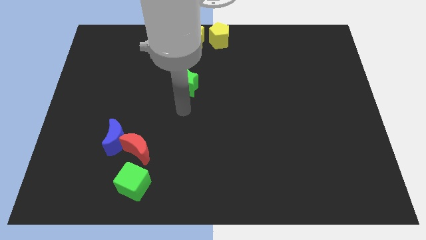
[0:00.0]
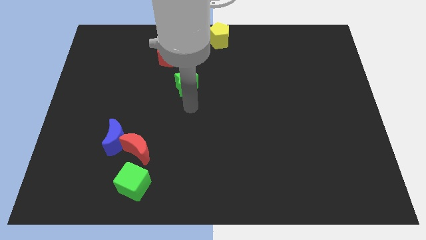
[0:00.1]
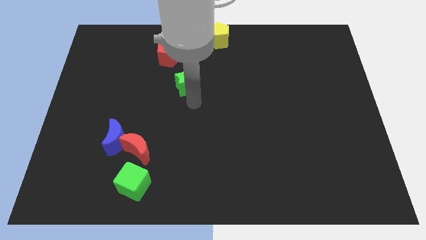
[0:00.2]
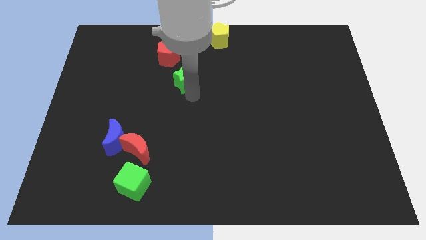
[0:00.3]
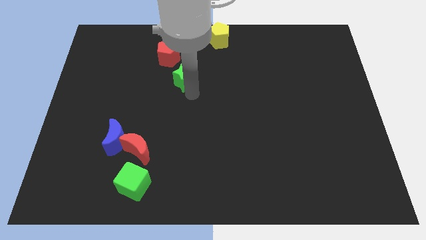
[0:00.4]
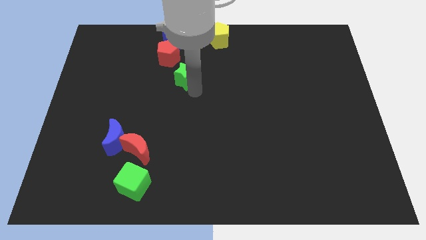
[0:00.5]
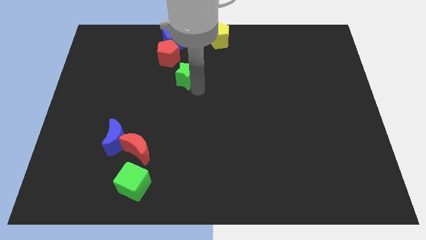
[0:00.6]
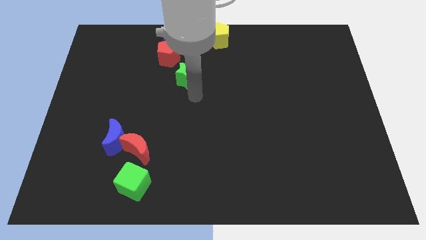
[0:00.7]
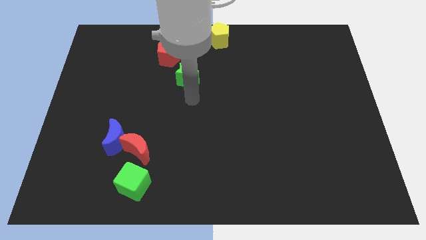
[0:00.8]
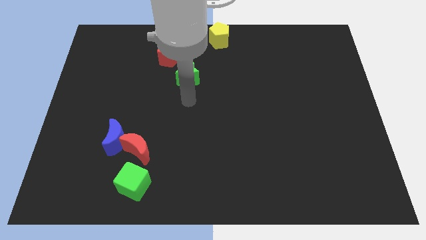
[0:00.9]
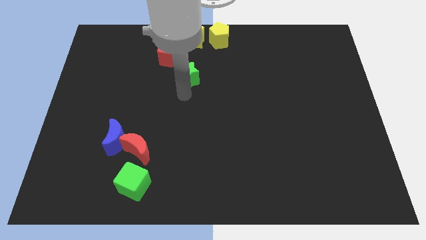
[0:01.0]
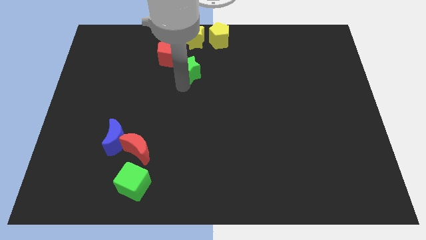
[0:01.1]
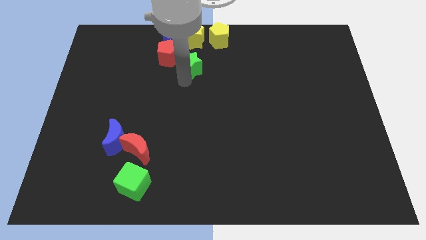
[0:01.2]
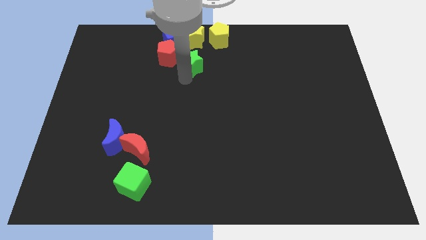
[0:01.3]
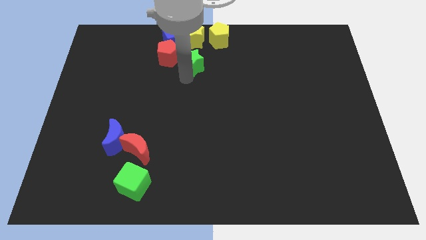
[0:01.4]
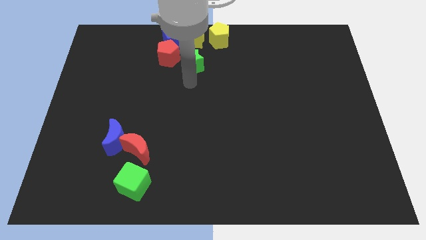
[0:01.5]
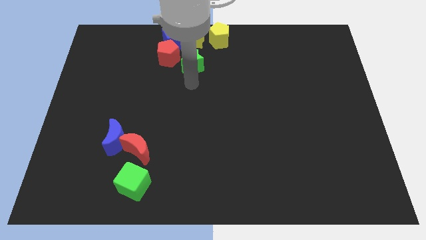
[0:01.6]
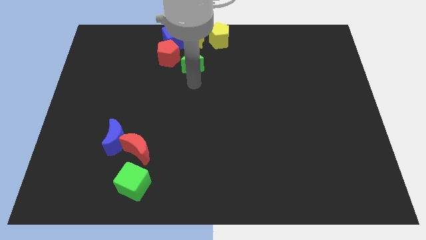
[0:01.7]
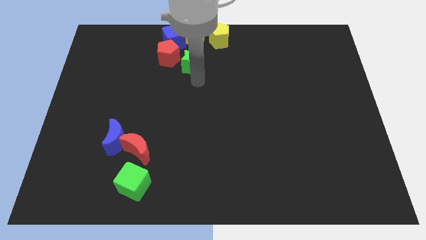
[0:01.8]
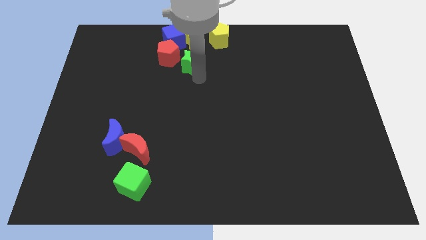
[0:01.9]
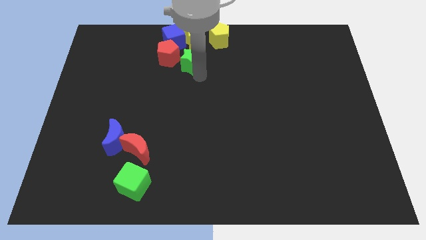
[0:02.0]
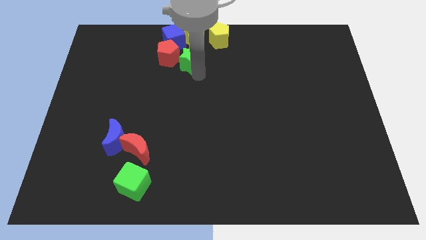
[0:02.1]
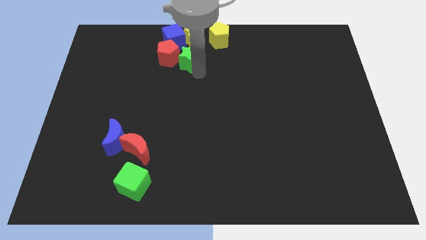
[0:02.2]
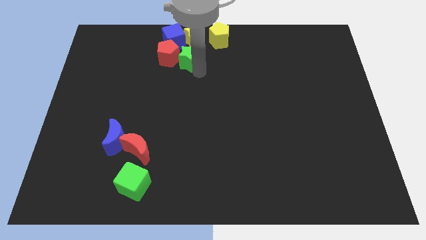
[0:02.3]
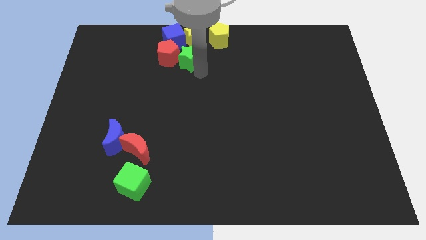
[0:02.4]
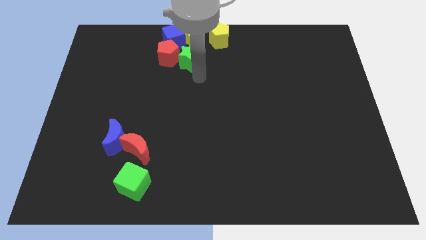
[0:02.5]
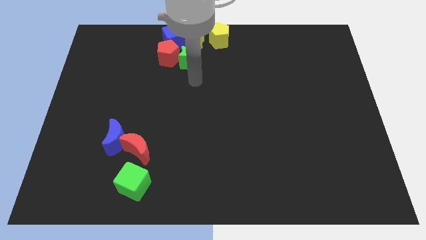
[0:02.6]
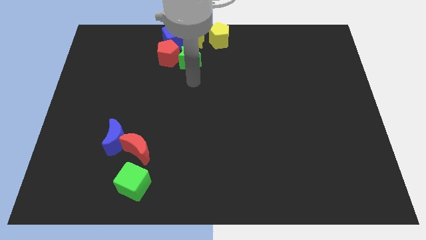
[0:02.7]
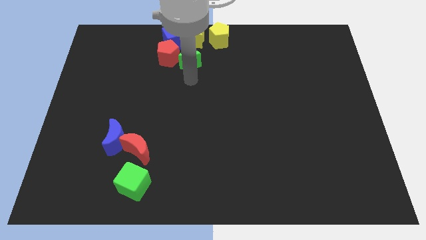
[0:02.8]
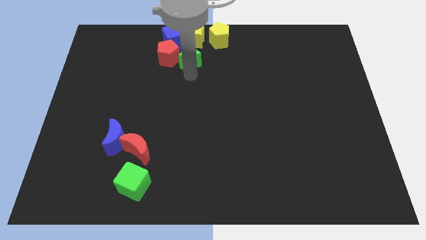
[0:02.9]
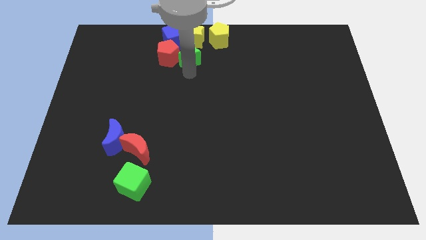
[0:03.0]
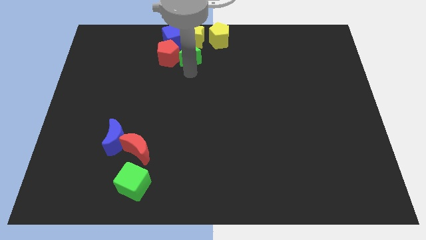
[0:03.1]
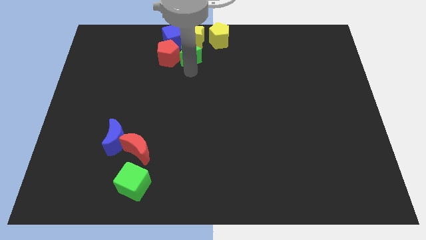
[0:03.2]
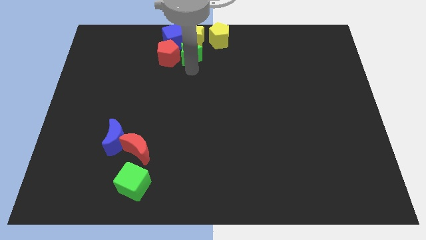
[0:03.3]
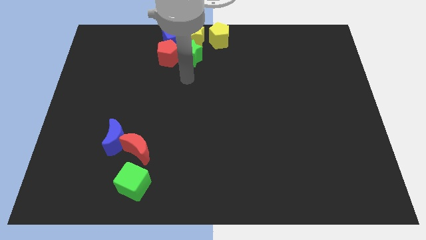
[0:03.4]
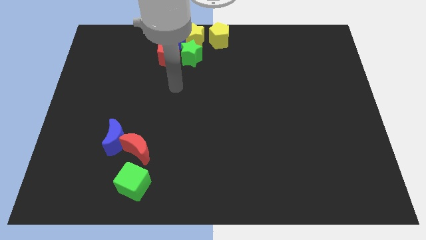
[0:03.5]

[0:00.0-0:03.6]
place the green star down to the yellow star

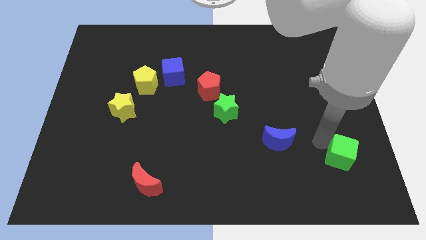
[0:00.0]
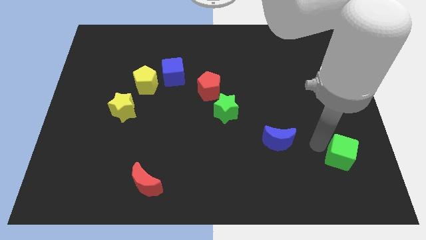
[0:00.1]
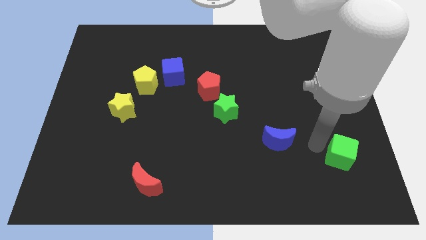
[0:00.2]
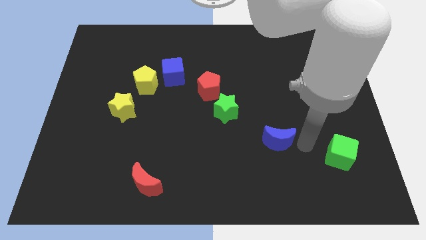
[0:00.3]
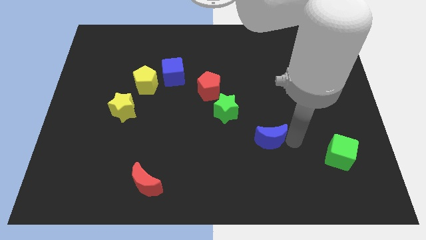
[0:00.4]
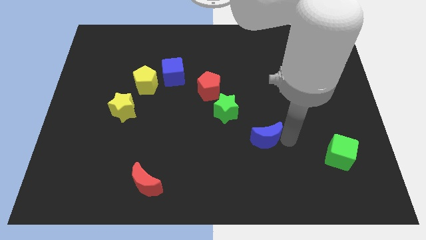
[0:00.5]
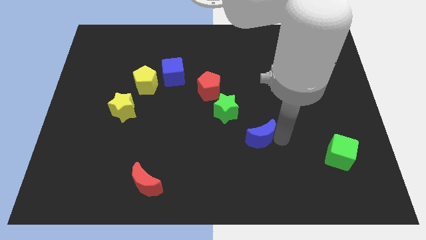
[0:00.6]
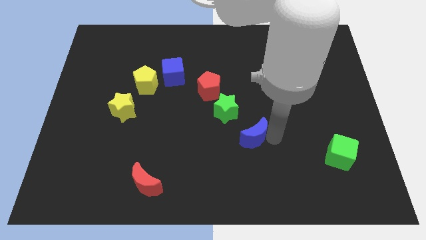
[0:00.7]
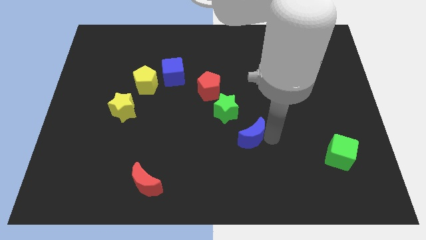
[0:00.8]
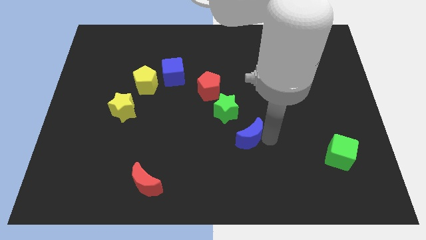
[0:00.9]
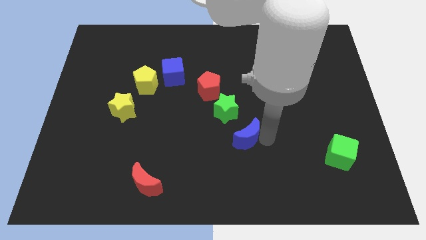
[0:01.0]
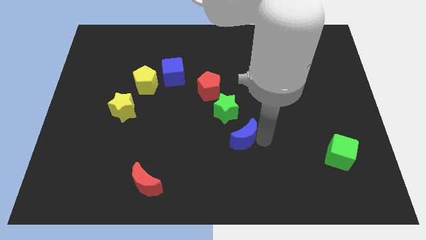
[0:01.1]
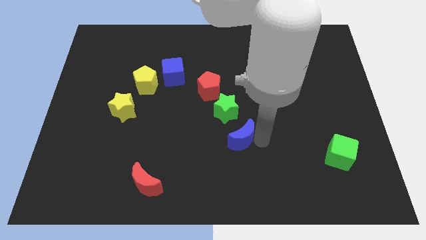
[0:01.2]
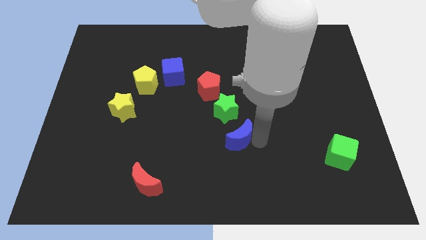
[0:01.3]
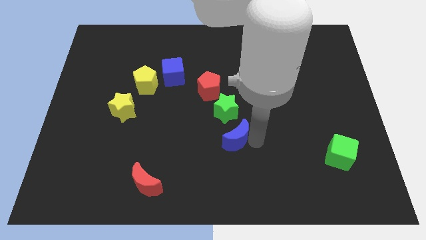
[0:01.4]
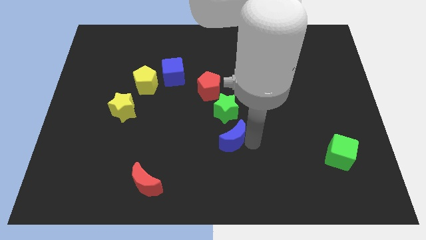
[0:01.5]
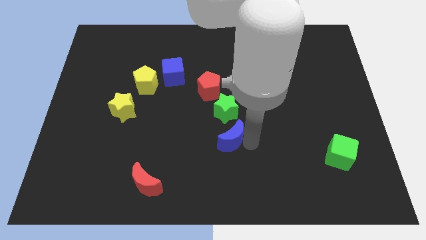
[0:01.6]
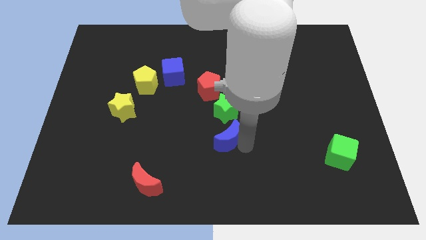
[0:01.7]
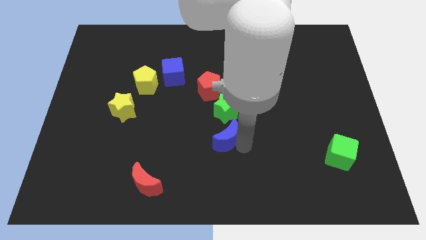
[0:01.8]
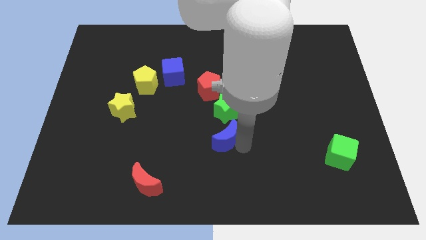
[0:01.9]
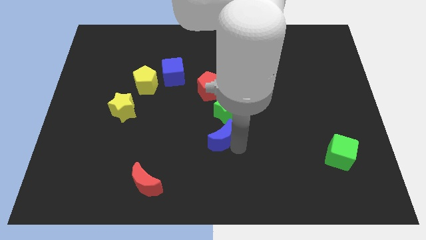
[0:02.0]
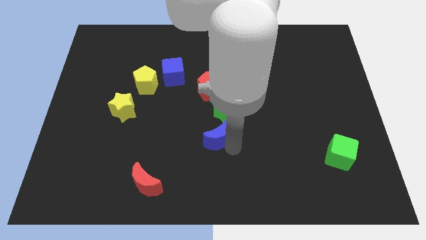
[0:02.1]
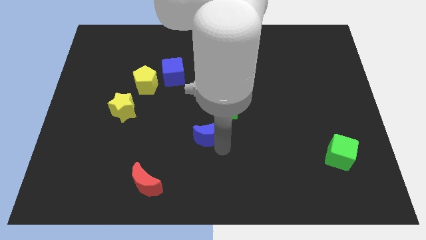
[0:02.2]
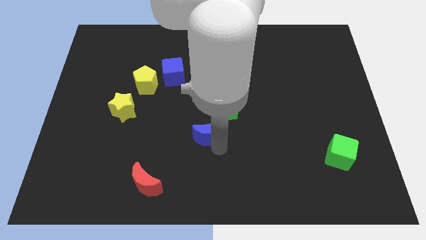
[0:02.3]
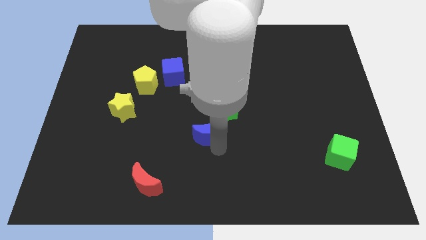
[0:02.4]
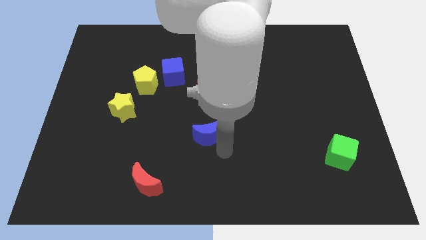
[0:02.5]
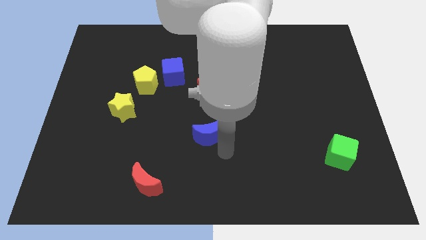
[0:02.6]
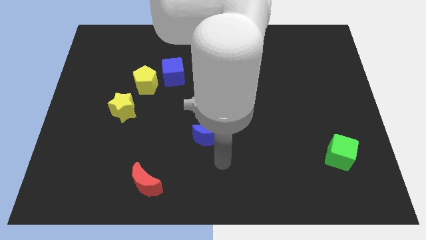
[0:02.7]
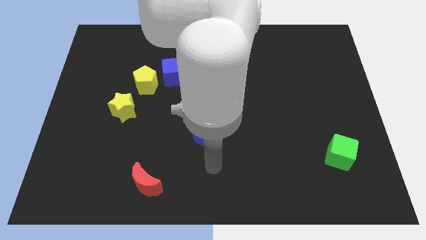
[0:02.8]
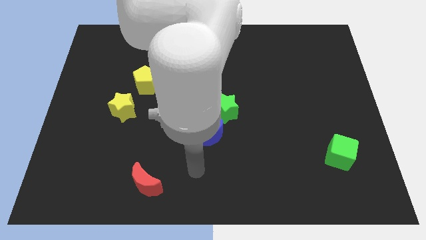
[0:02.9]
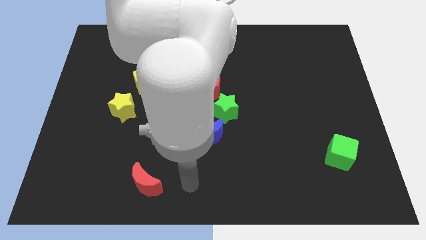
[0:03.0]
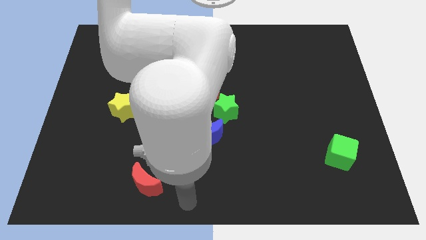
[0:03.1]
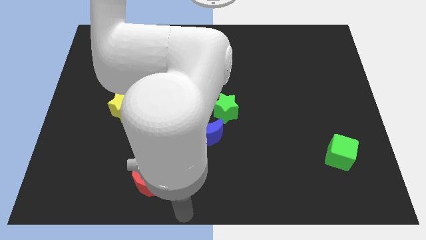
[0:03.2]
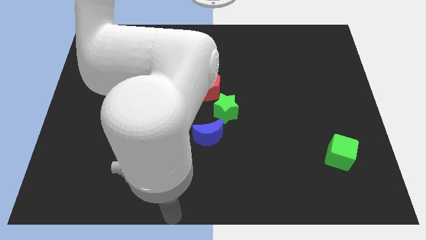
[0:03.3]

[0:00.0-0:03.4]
push the blue crescent to the bottom left of the green star

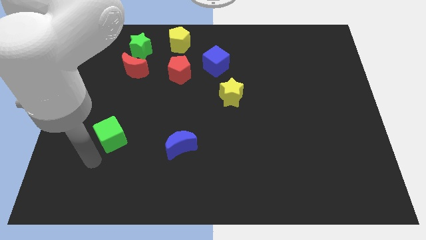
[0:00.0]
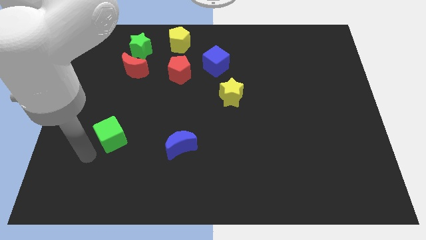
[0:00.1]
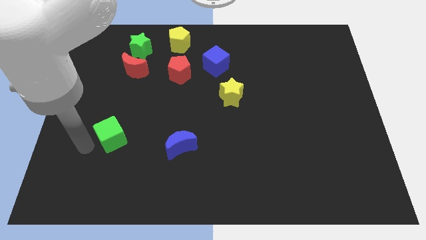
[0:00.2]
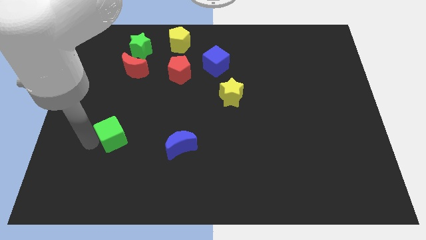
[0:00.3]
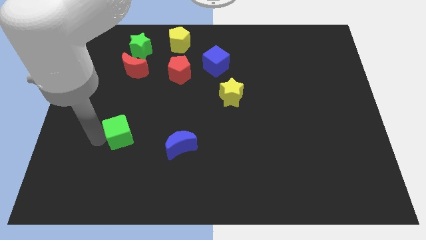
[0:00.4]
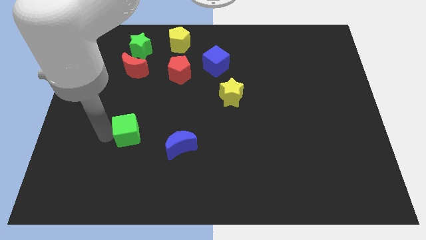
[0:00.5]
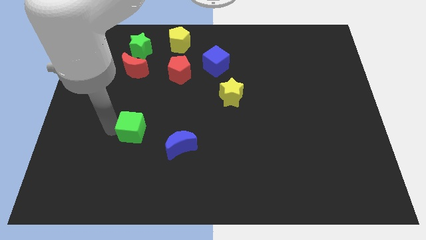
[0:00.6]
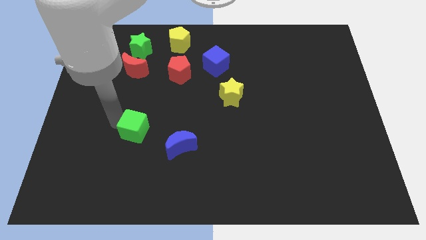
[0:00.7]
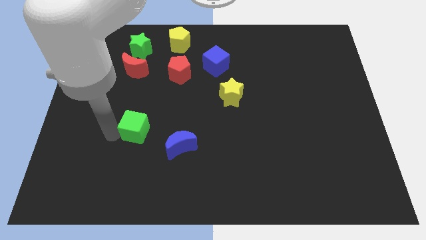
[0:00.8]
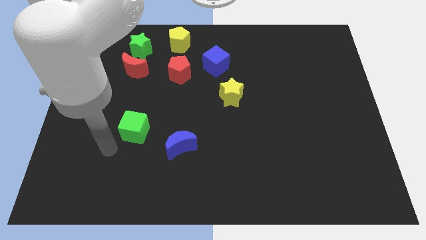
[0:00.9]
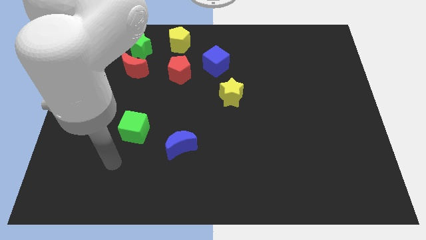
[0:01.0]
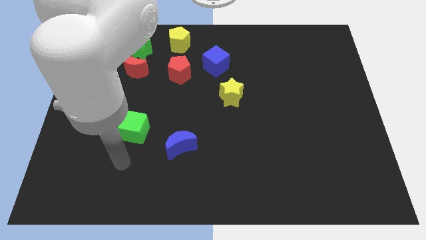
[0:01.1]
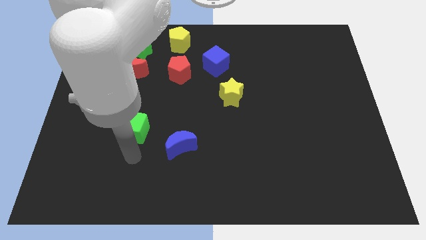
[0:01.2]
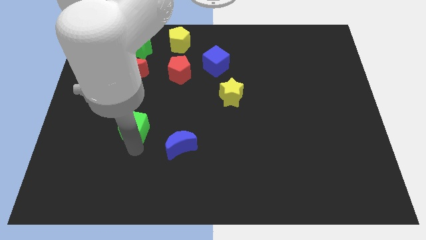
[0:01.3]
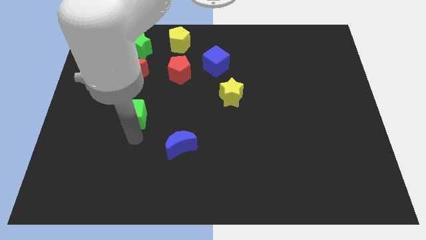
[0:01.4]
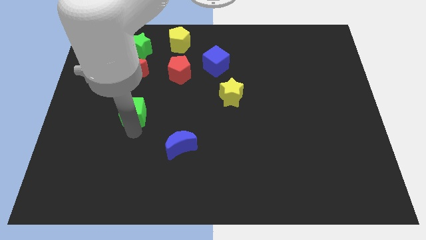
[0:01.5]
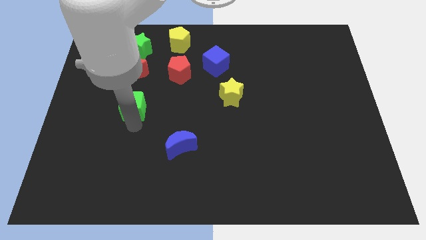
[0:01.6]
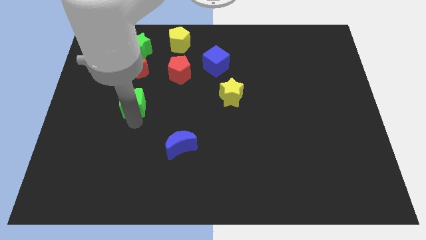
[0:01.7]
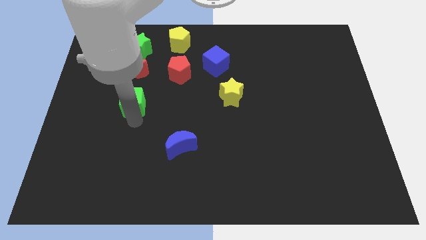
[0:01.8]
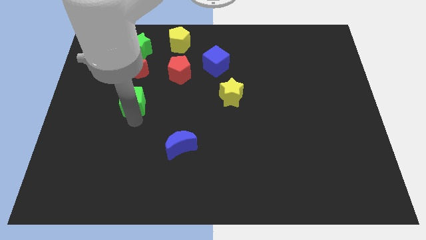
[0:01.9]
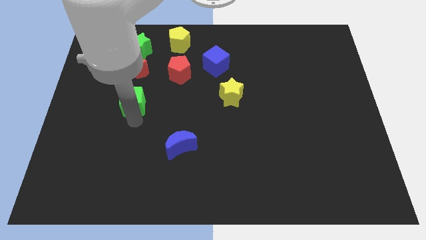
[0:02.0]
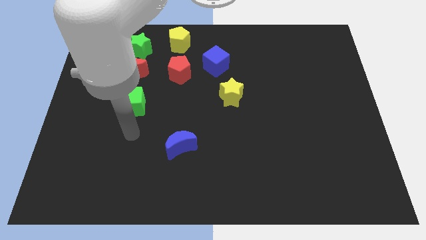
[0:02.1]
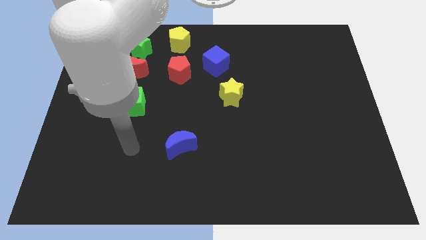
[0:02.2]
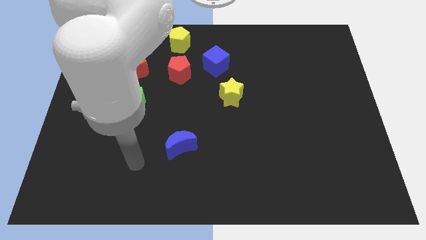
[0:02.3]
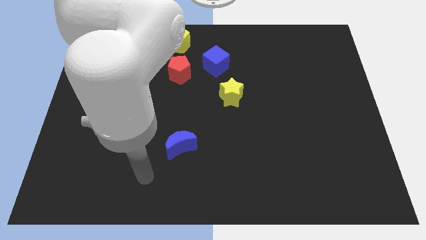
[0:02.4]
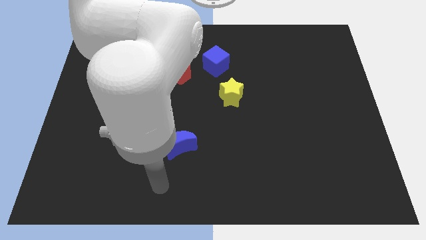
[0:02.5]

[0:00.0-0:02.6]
place the green cube to the bottom of the red crescent
